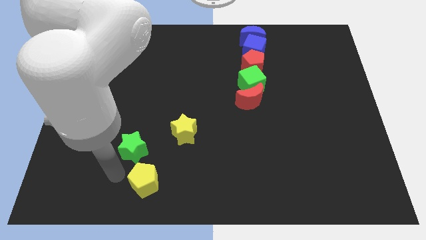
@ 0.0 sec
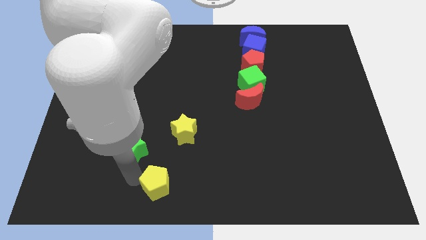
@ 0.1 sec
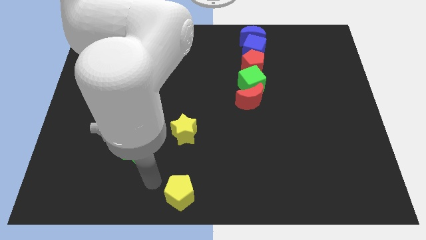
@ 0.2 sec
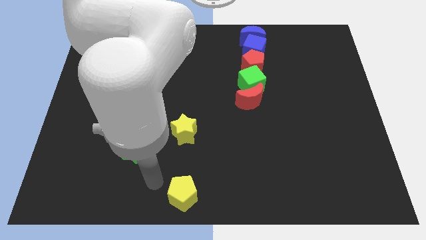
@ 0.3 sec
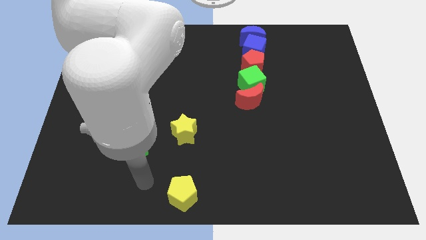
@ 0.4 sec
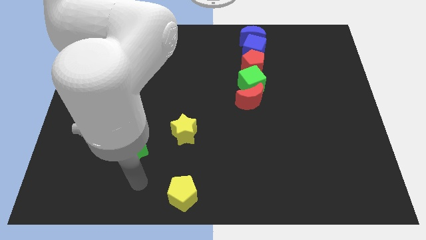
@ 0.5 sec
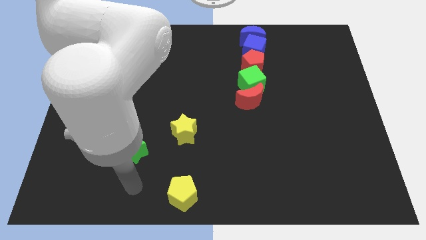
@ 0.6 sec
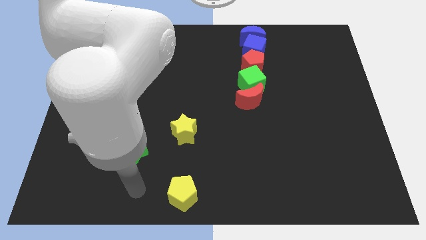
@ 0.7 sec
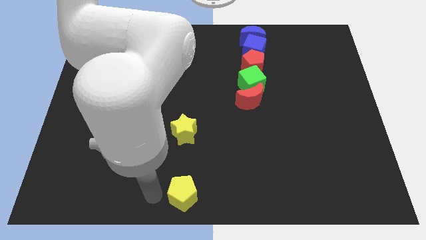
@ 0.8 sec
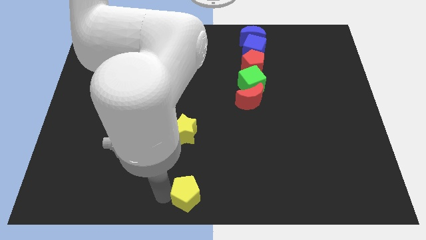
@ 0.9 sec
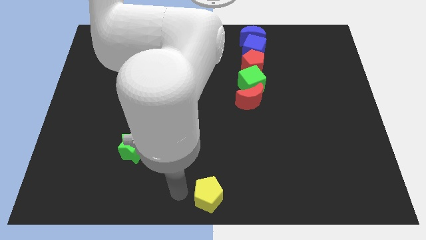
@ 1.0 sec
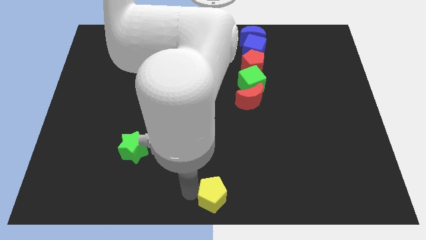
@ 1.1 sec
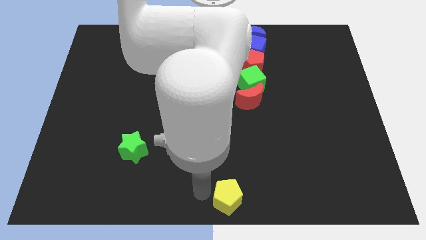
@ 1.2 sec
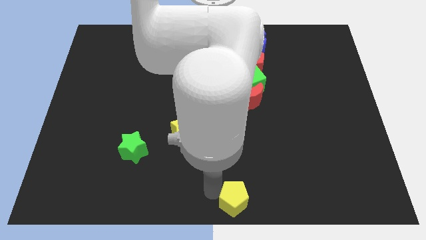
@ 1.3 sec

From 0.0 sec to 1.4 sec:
push the yellow pentagon to the bottom center of the board

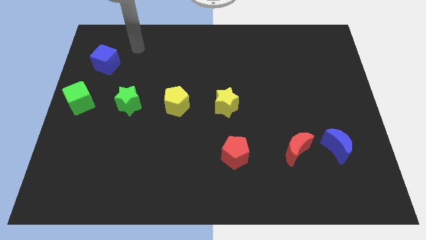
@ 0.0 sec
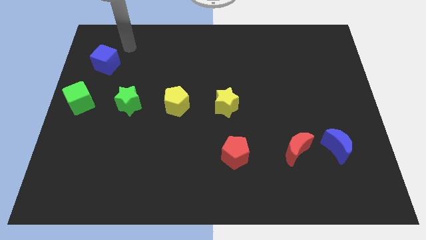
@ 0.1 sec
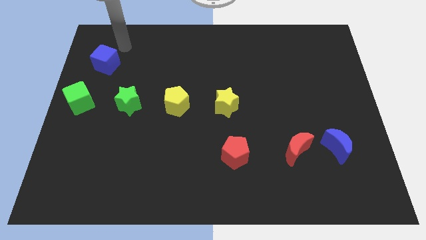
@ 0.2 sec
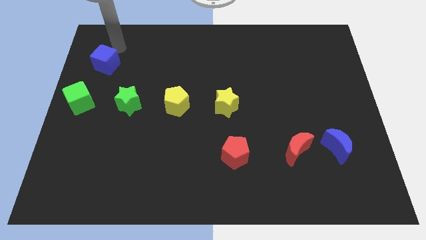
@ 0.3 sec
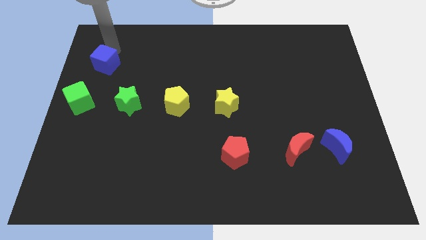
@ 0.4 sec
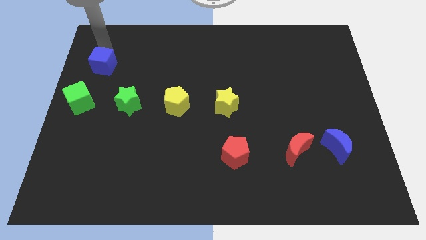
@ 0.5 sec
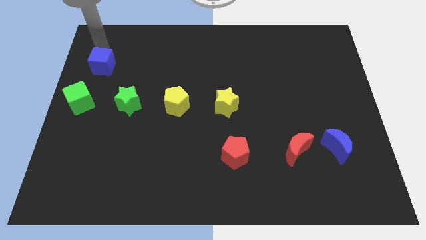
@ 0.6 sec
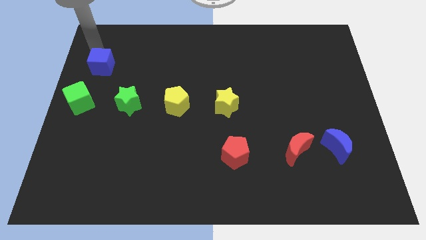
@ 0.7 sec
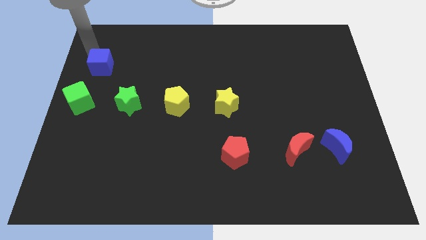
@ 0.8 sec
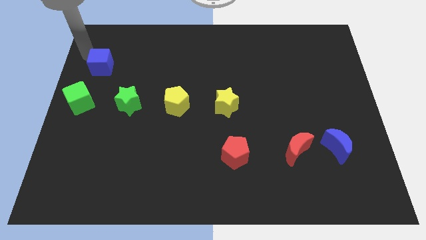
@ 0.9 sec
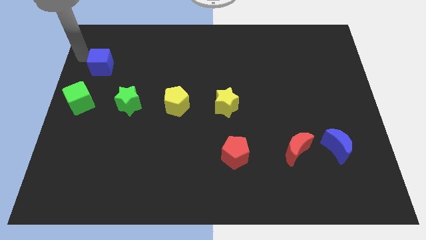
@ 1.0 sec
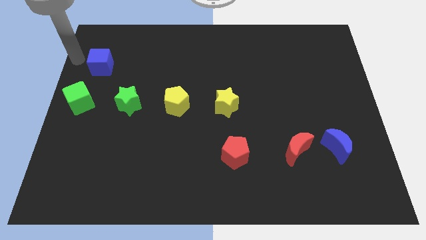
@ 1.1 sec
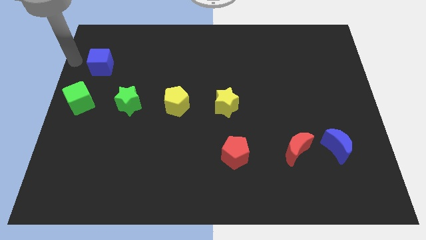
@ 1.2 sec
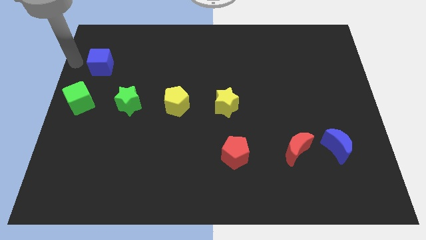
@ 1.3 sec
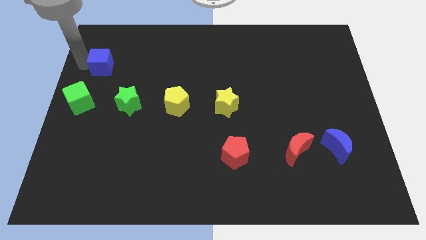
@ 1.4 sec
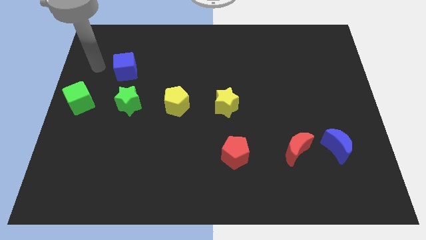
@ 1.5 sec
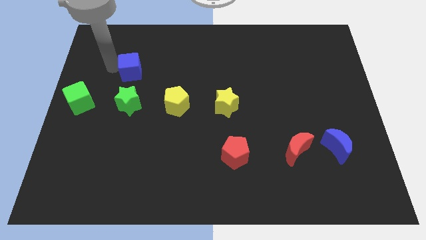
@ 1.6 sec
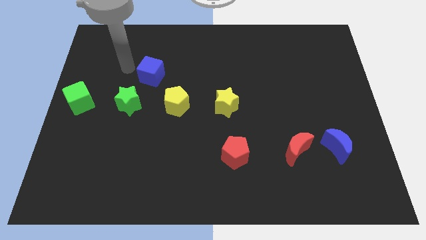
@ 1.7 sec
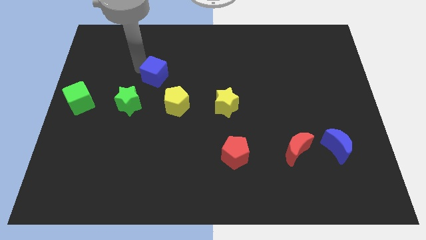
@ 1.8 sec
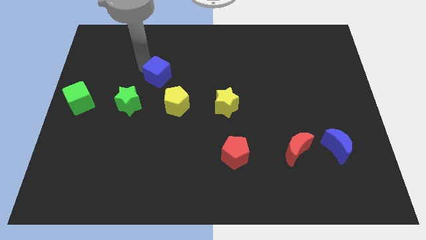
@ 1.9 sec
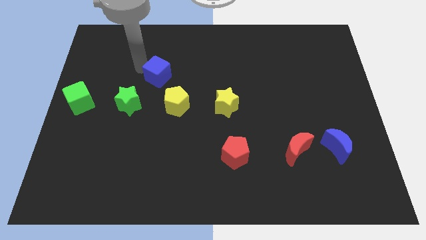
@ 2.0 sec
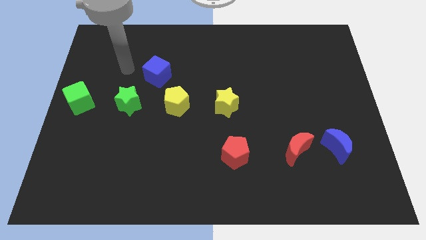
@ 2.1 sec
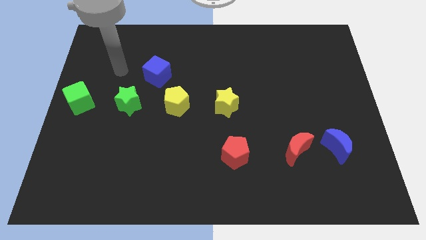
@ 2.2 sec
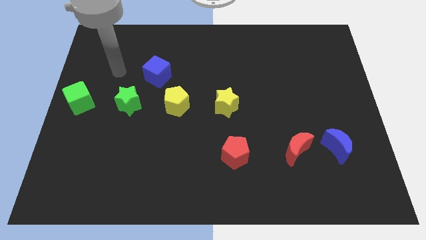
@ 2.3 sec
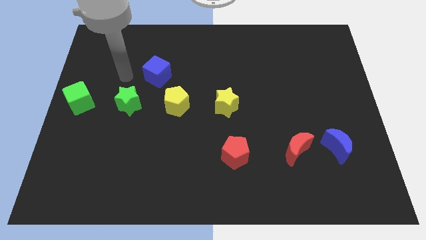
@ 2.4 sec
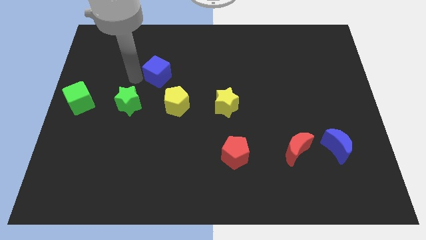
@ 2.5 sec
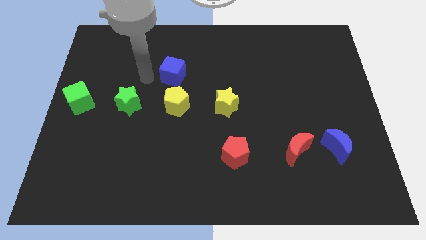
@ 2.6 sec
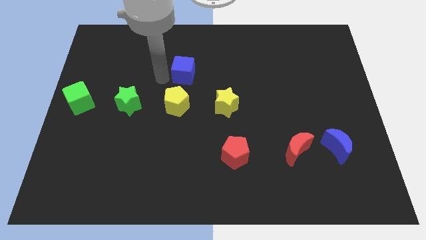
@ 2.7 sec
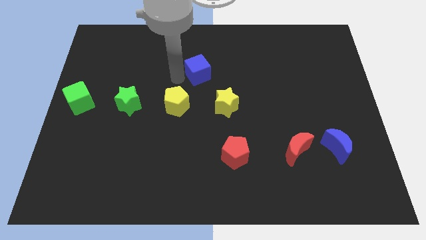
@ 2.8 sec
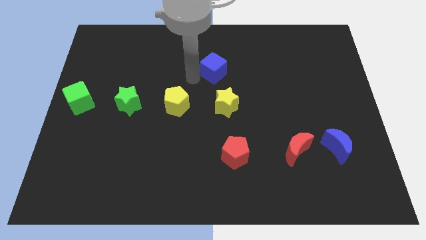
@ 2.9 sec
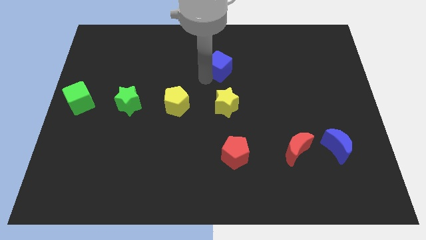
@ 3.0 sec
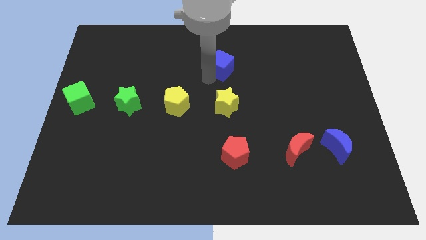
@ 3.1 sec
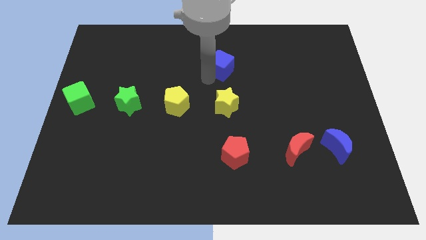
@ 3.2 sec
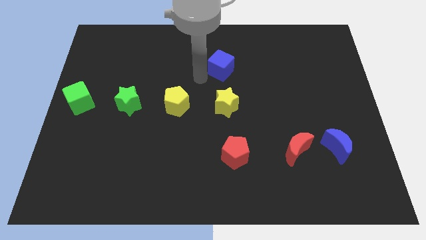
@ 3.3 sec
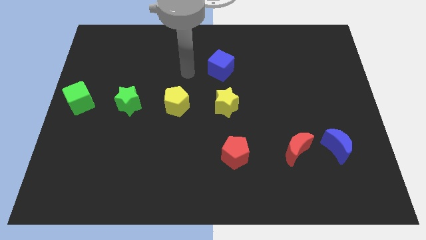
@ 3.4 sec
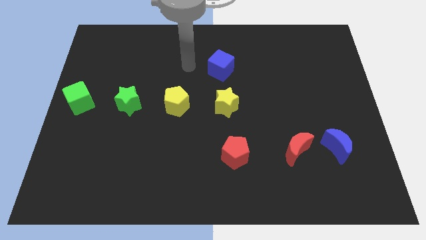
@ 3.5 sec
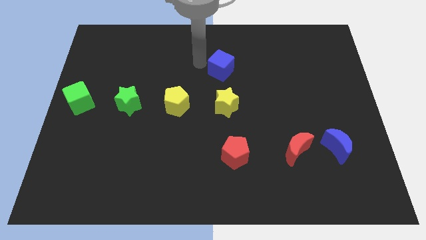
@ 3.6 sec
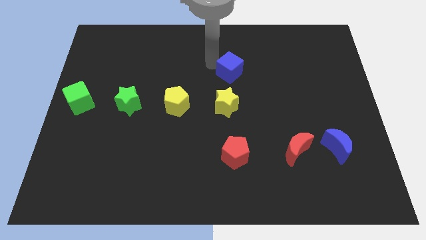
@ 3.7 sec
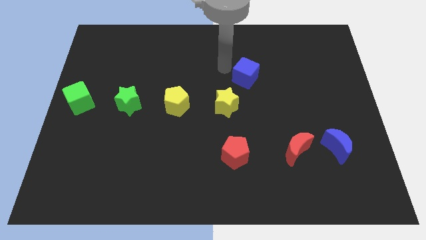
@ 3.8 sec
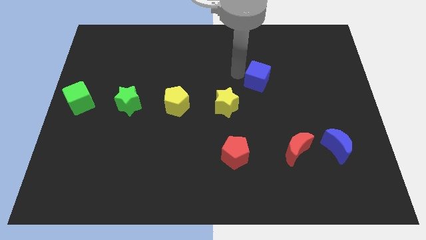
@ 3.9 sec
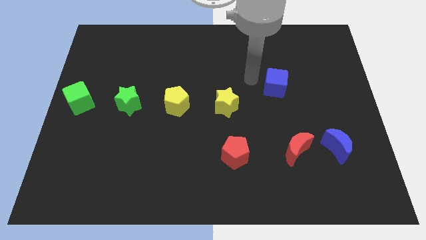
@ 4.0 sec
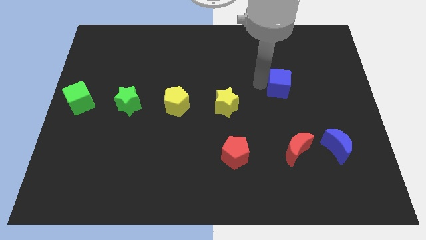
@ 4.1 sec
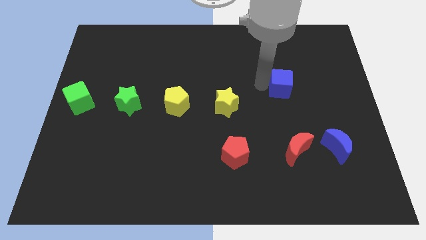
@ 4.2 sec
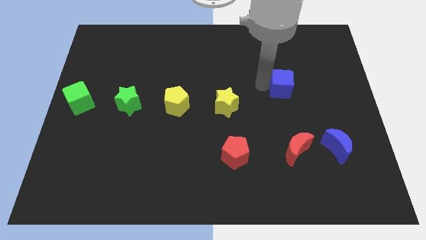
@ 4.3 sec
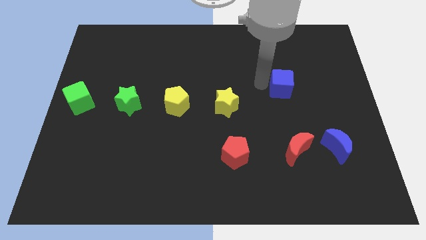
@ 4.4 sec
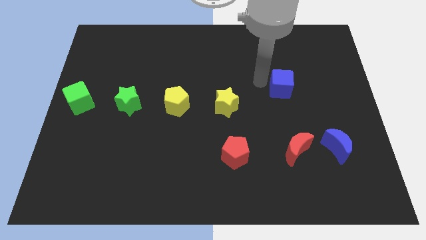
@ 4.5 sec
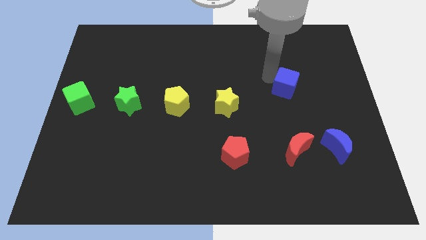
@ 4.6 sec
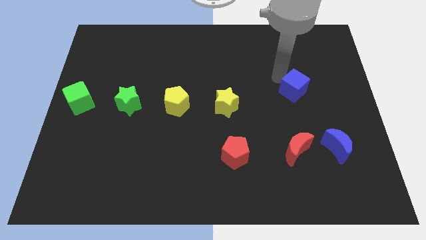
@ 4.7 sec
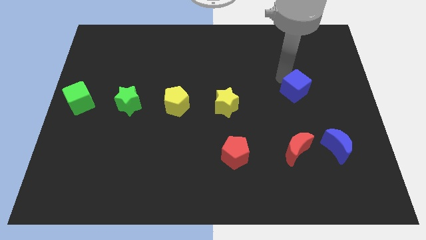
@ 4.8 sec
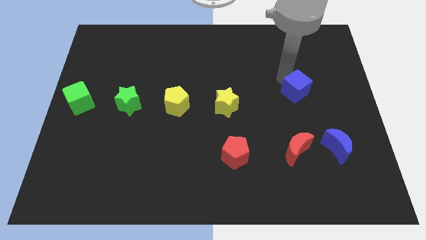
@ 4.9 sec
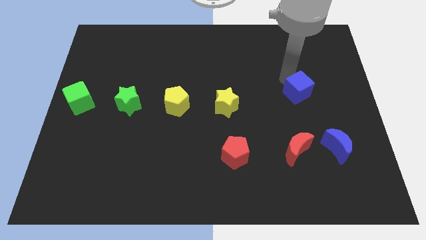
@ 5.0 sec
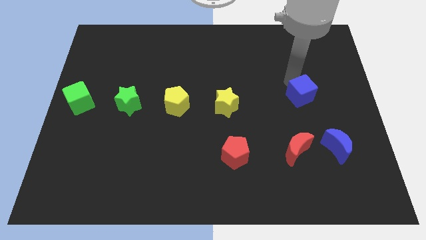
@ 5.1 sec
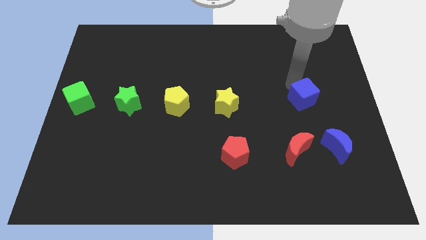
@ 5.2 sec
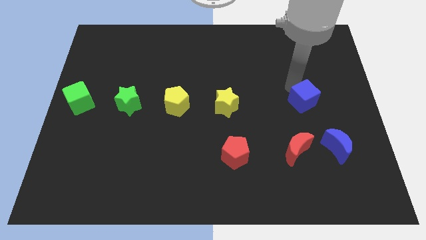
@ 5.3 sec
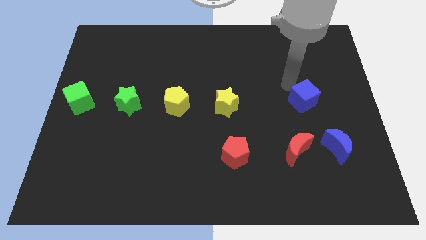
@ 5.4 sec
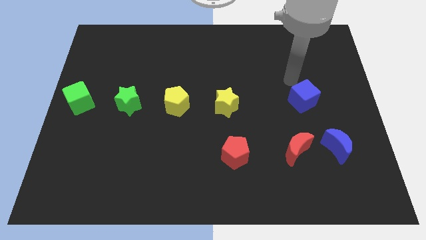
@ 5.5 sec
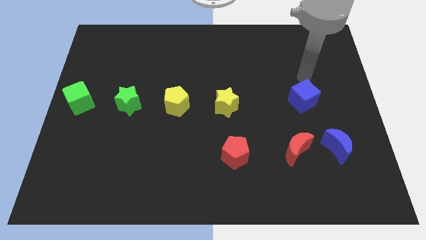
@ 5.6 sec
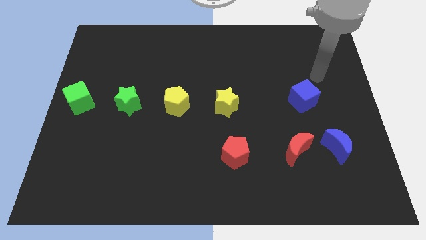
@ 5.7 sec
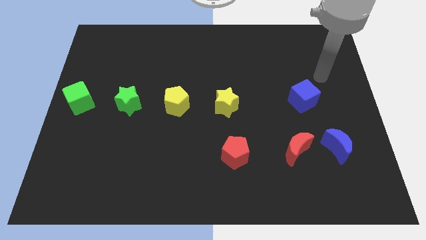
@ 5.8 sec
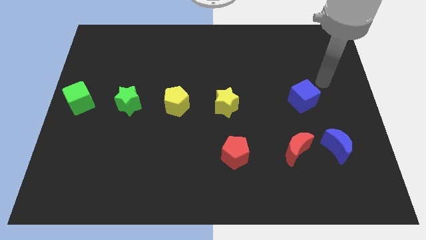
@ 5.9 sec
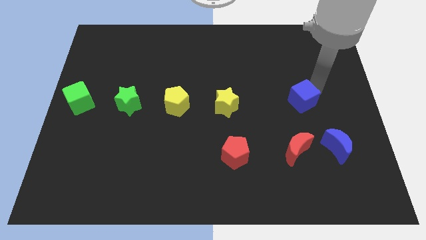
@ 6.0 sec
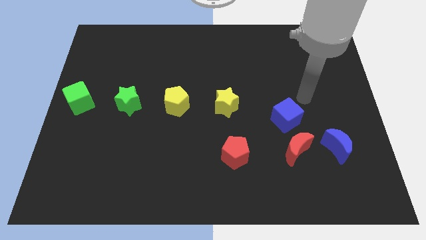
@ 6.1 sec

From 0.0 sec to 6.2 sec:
place the blue cube to the right of the yellow star

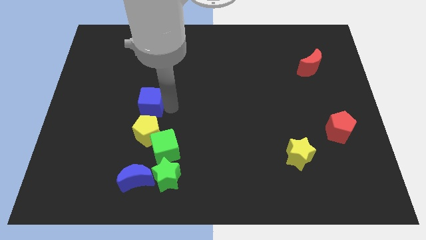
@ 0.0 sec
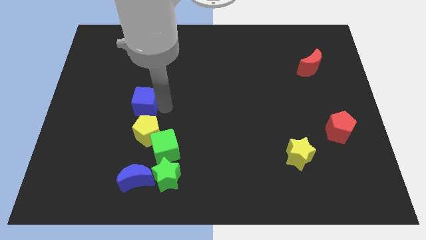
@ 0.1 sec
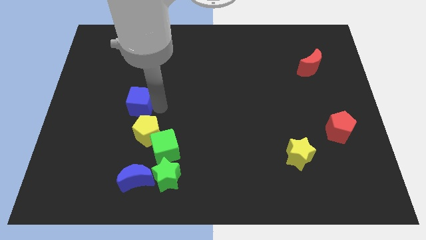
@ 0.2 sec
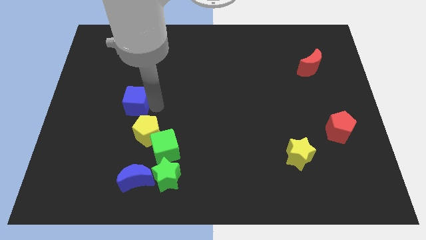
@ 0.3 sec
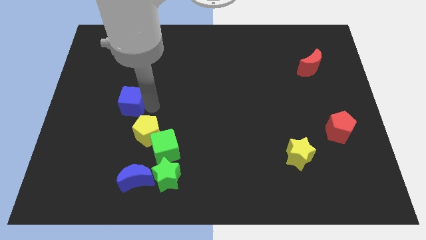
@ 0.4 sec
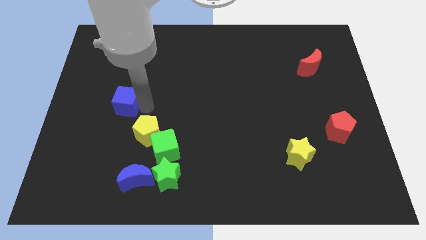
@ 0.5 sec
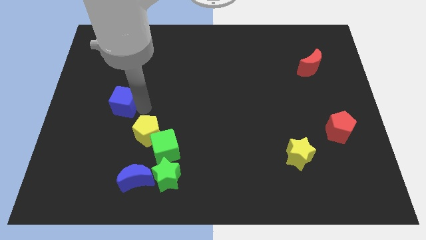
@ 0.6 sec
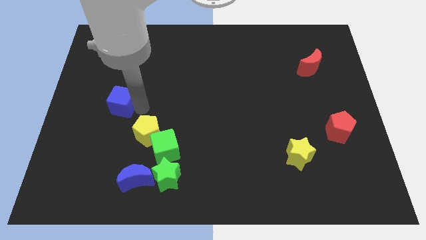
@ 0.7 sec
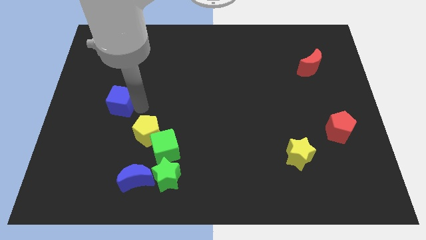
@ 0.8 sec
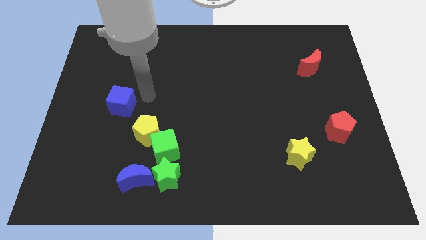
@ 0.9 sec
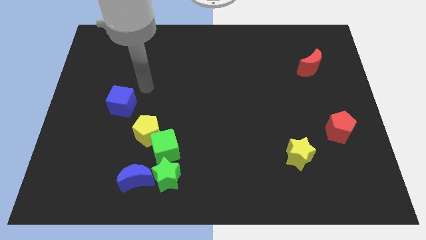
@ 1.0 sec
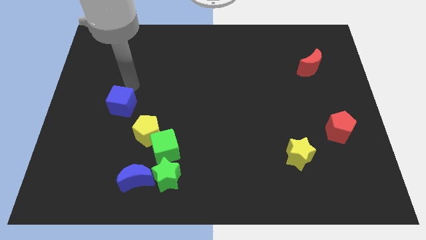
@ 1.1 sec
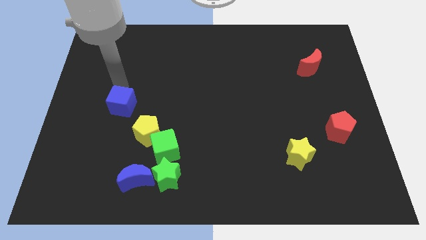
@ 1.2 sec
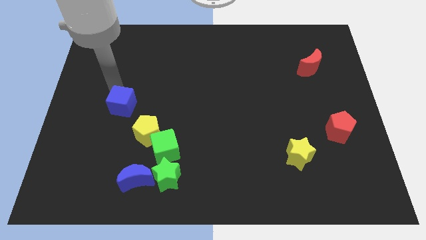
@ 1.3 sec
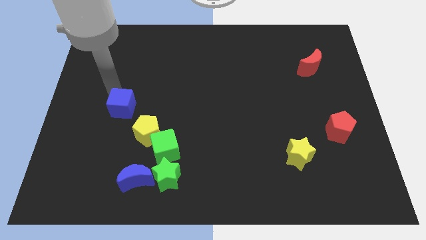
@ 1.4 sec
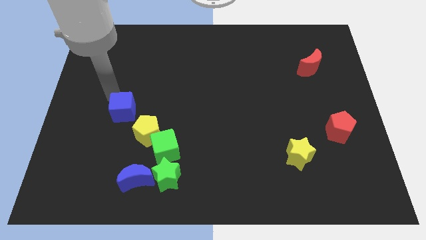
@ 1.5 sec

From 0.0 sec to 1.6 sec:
push the blue cube slightly to the left
